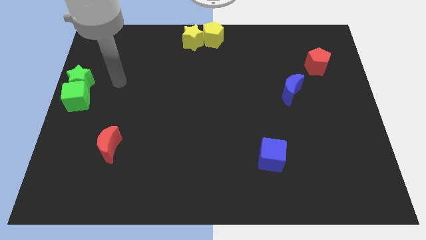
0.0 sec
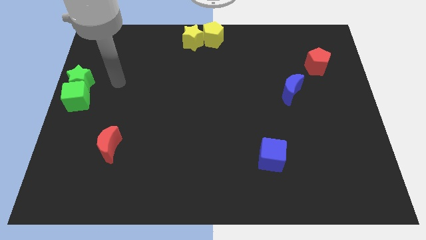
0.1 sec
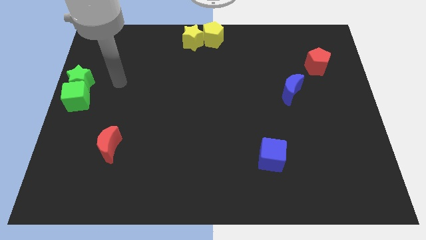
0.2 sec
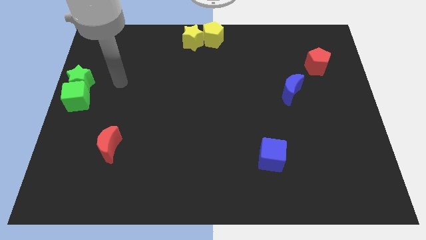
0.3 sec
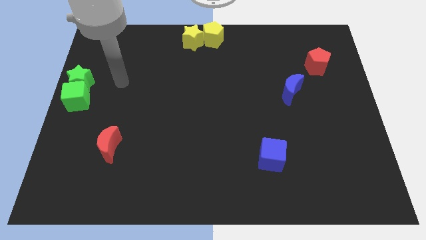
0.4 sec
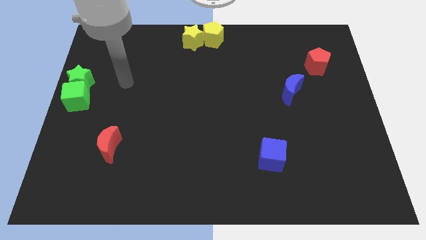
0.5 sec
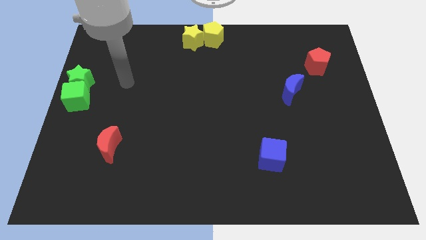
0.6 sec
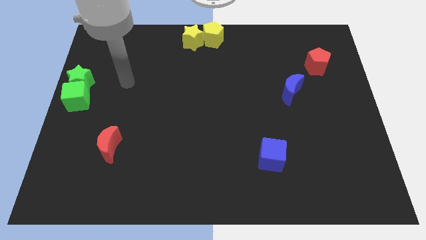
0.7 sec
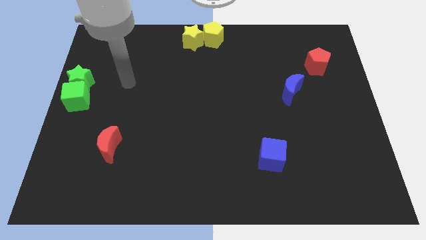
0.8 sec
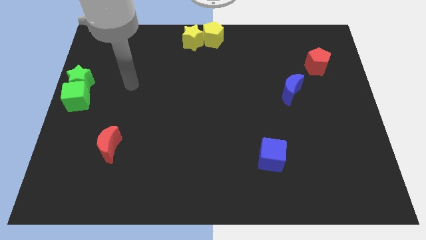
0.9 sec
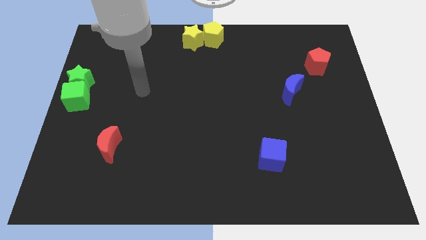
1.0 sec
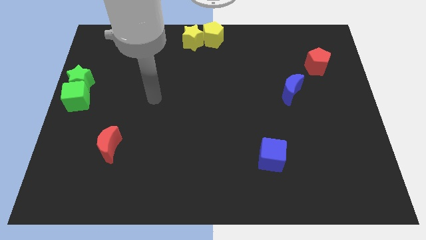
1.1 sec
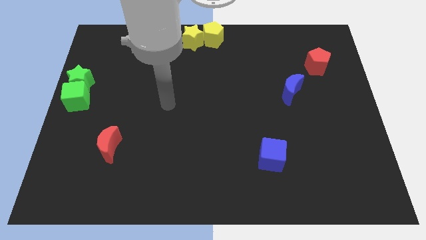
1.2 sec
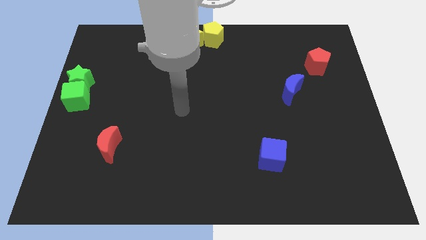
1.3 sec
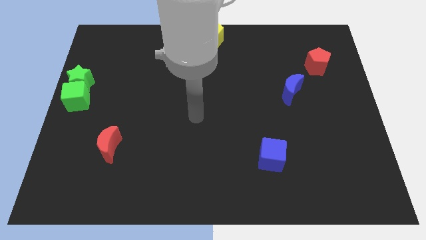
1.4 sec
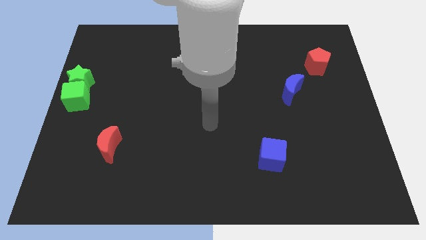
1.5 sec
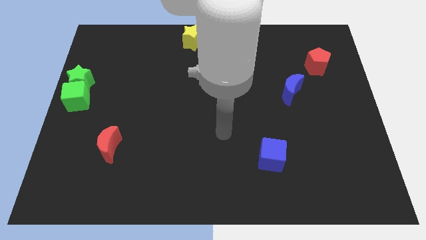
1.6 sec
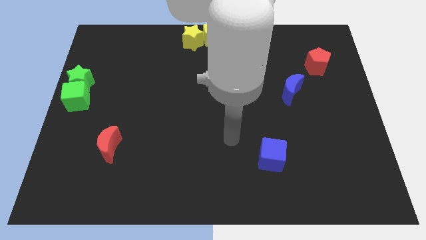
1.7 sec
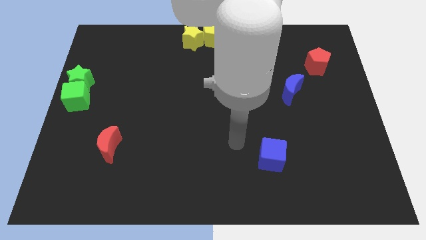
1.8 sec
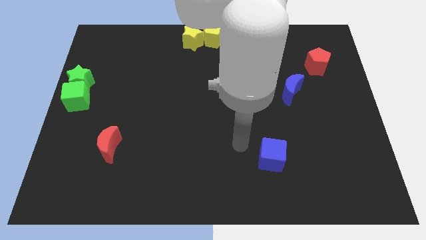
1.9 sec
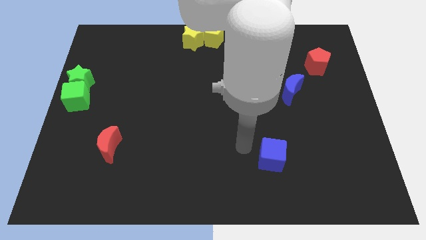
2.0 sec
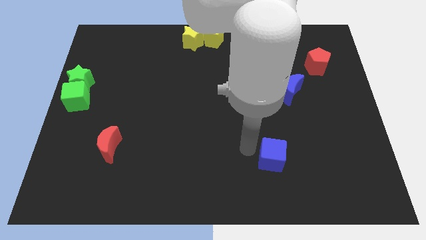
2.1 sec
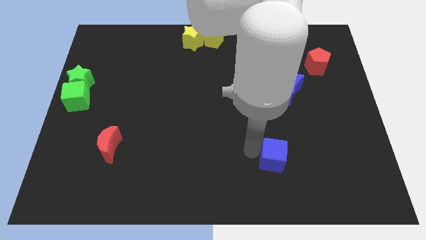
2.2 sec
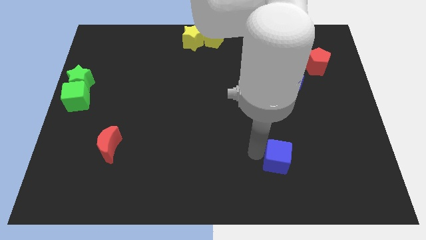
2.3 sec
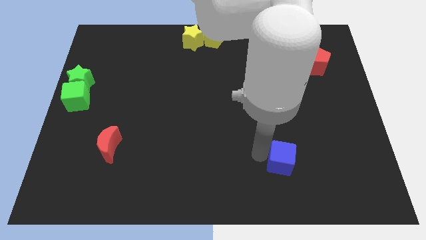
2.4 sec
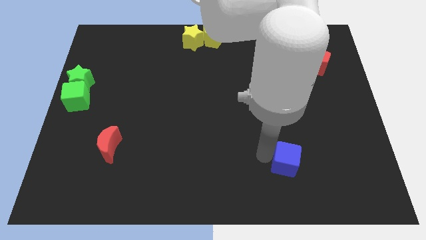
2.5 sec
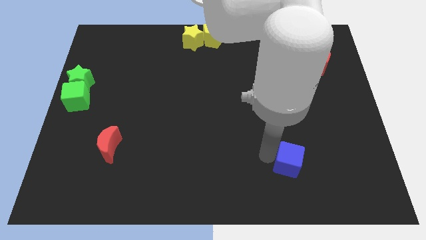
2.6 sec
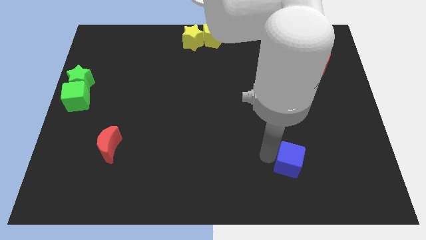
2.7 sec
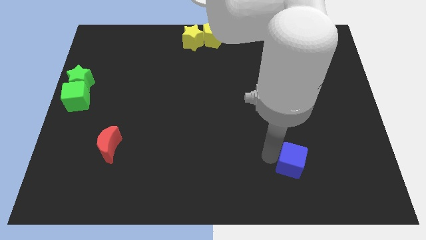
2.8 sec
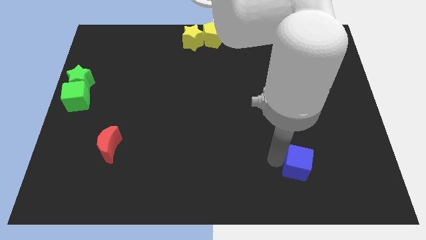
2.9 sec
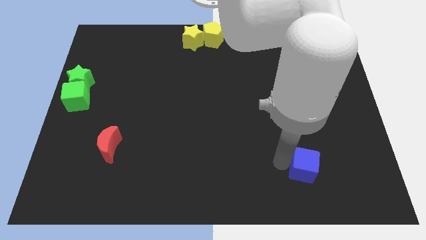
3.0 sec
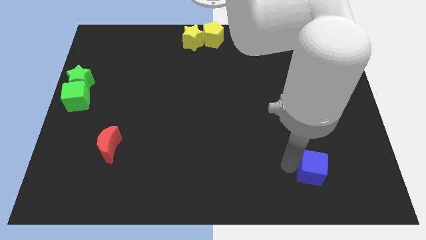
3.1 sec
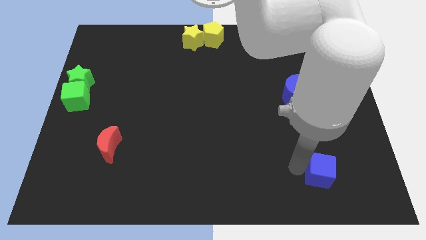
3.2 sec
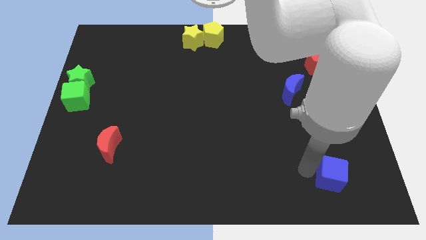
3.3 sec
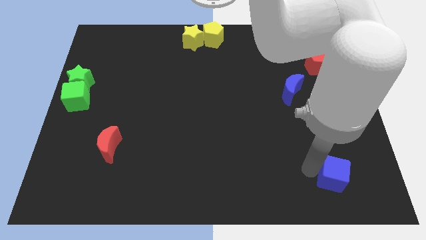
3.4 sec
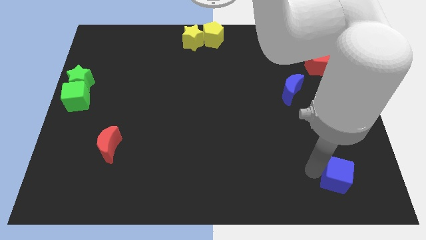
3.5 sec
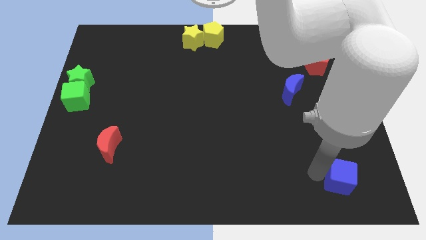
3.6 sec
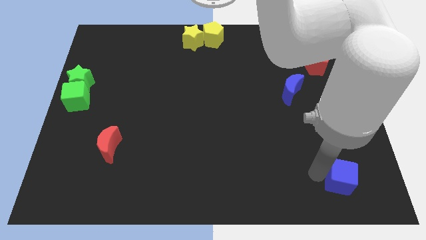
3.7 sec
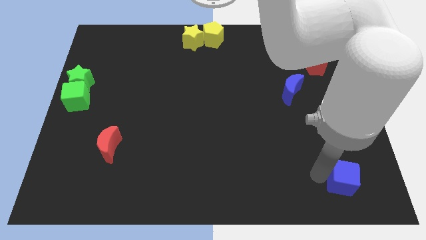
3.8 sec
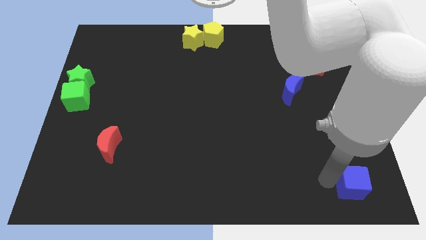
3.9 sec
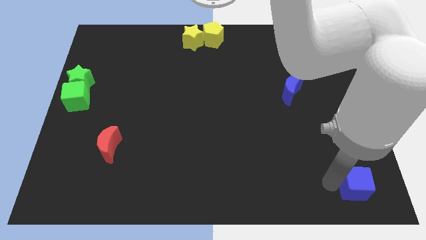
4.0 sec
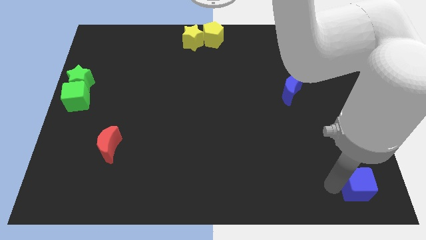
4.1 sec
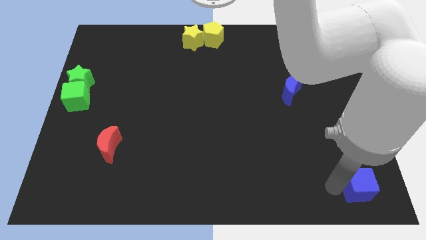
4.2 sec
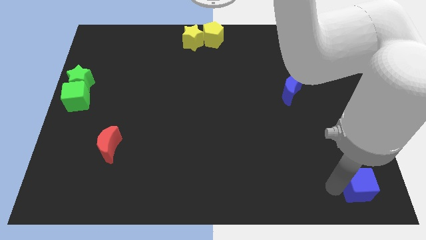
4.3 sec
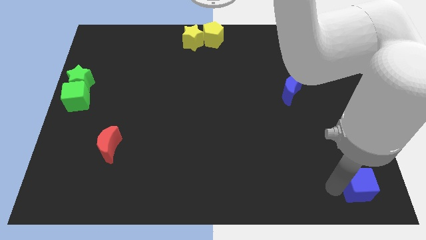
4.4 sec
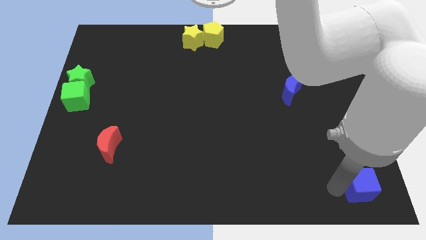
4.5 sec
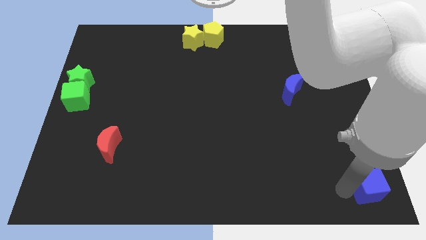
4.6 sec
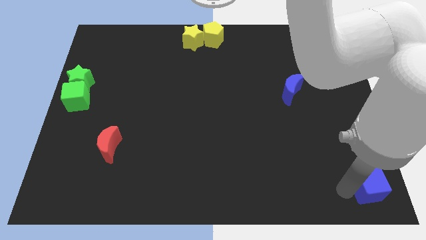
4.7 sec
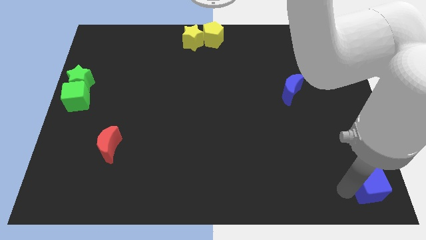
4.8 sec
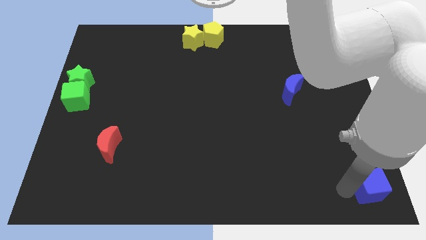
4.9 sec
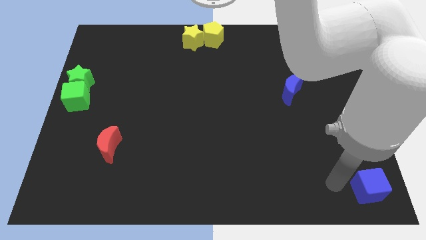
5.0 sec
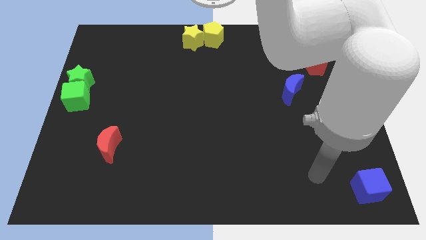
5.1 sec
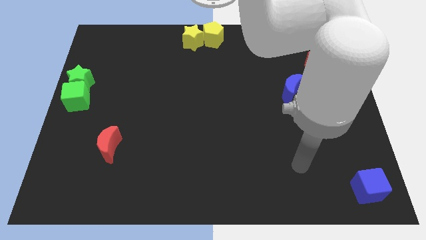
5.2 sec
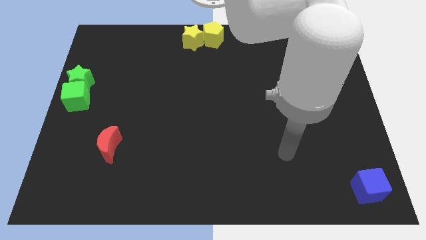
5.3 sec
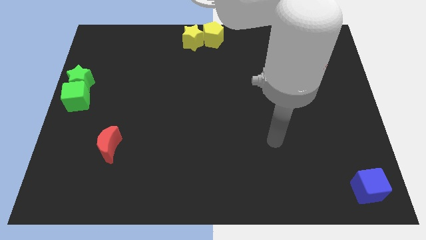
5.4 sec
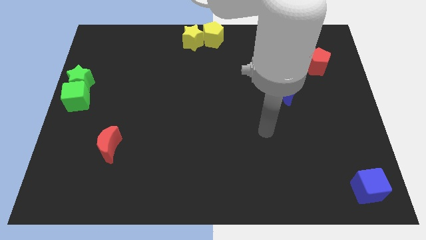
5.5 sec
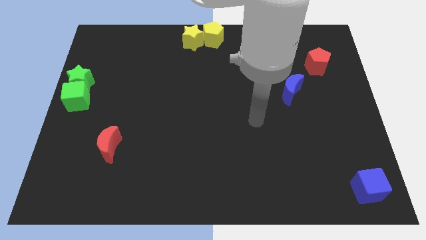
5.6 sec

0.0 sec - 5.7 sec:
slide the blue cube to the bottom right side of the board

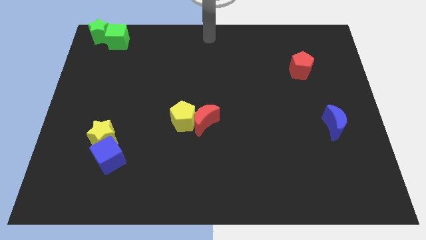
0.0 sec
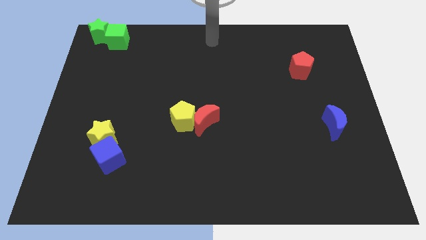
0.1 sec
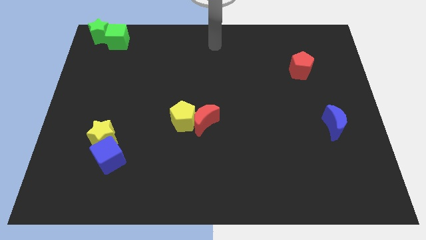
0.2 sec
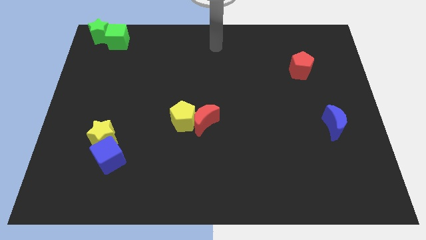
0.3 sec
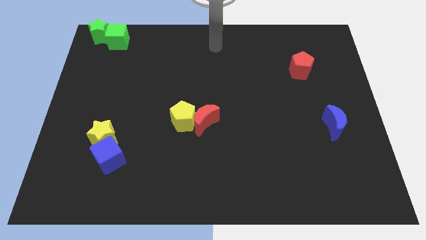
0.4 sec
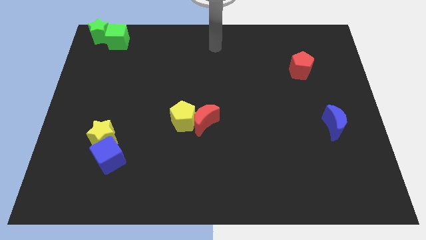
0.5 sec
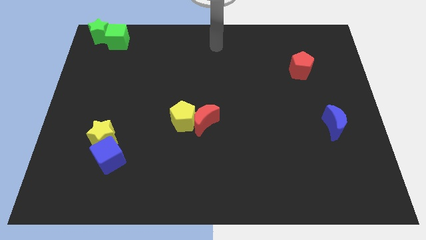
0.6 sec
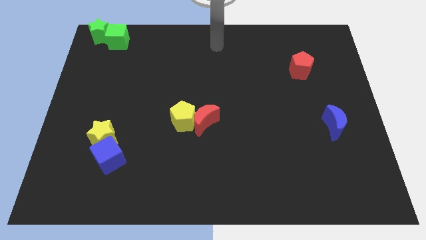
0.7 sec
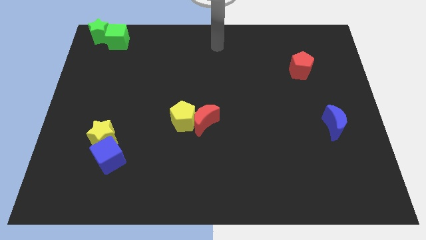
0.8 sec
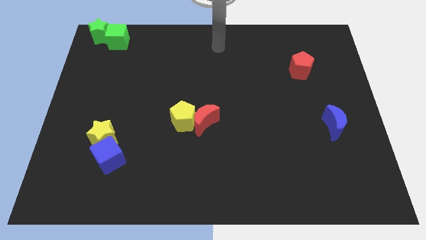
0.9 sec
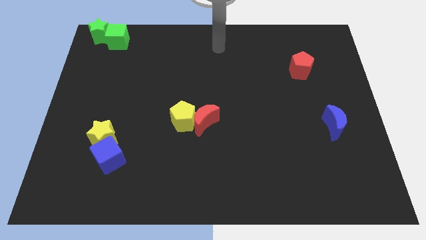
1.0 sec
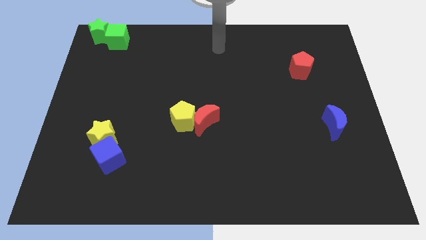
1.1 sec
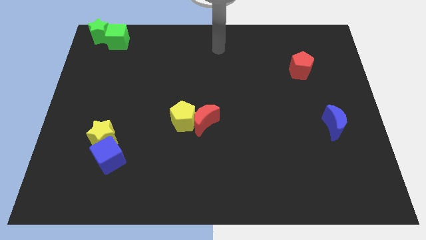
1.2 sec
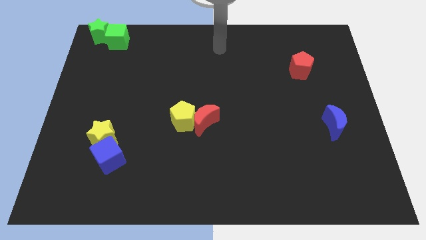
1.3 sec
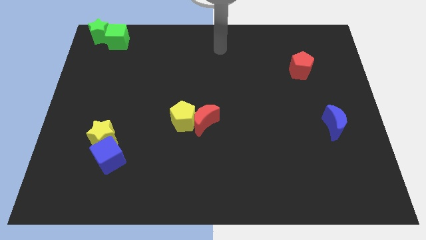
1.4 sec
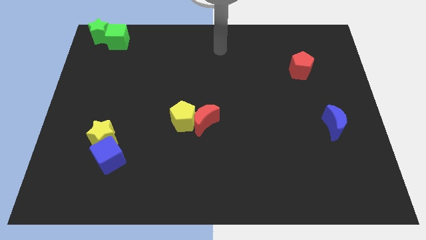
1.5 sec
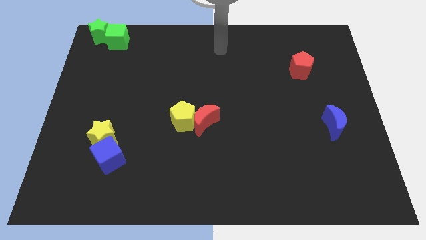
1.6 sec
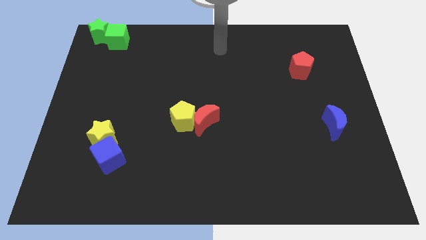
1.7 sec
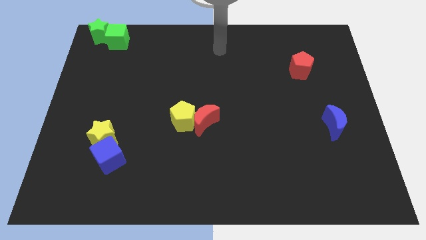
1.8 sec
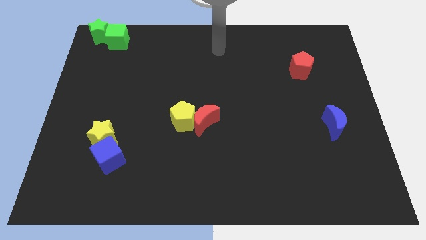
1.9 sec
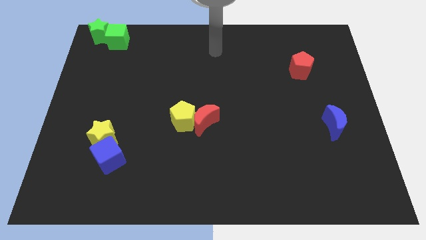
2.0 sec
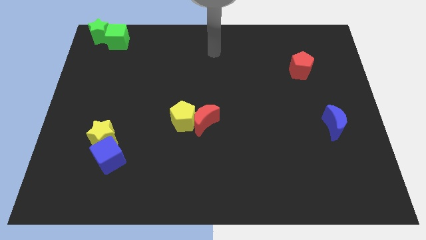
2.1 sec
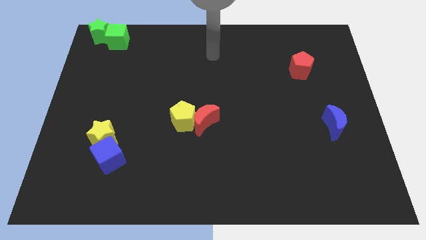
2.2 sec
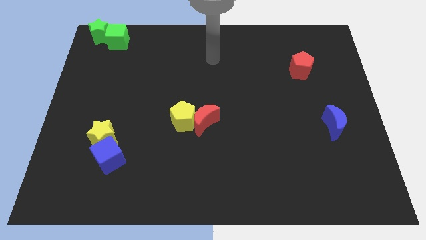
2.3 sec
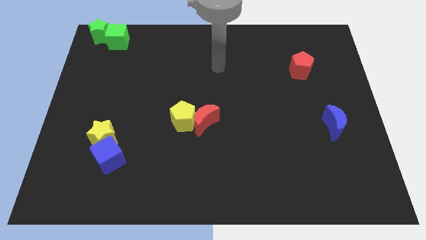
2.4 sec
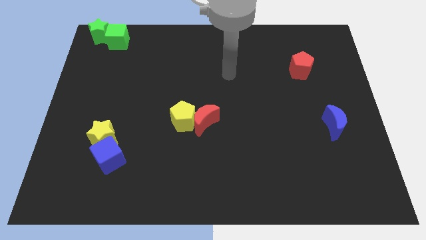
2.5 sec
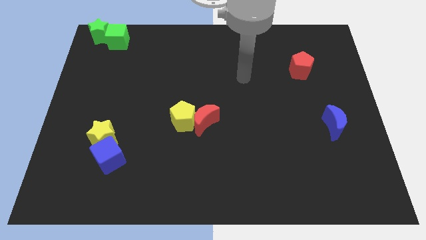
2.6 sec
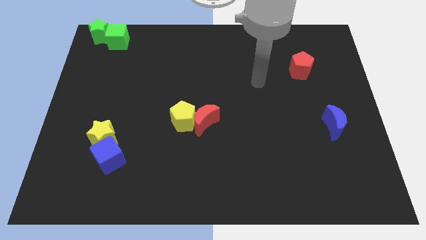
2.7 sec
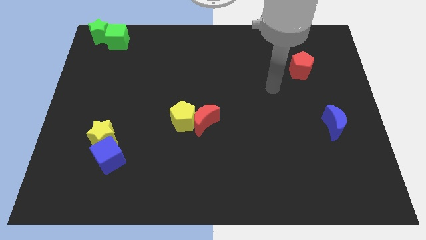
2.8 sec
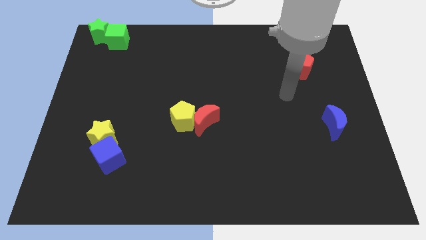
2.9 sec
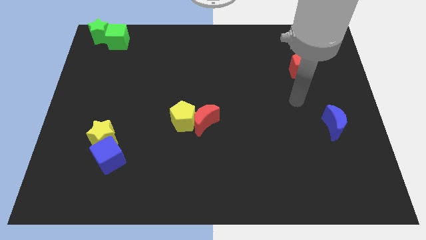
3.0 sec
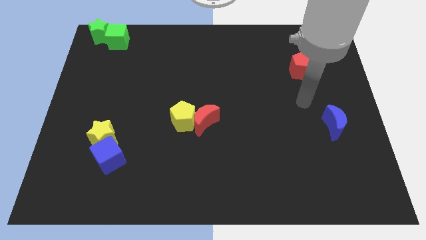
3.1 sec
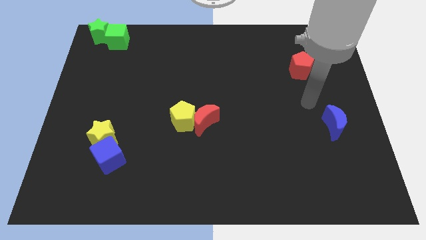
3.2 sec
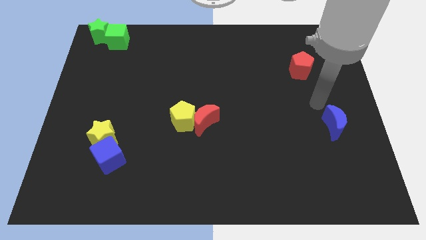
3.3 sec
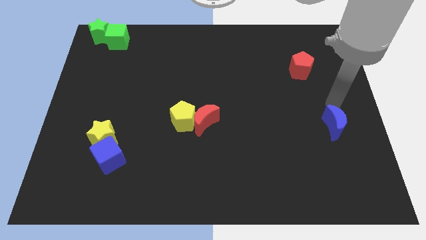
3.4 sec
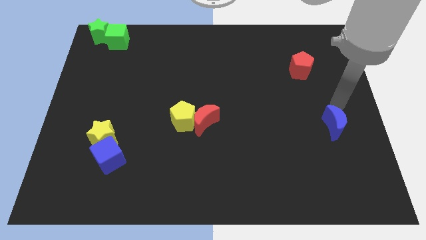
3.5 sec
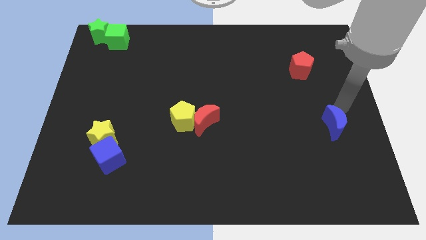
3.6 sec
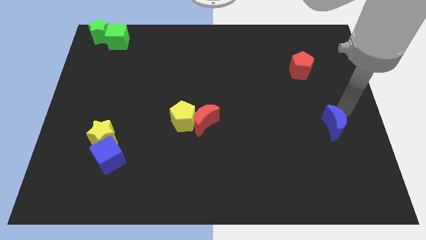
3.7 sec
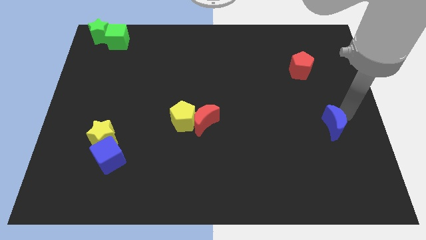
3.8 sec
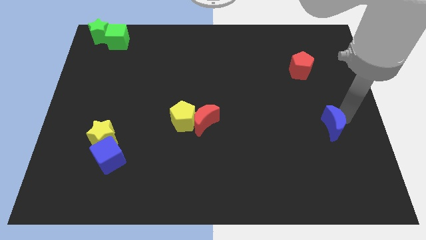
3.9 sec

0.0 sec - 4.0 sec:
move your arm close to the blue crescent
